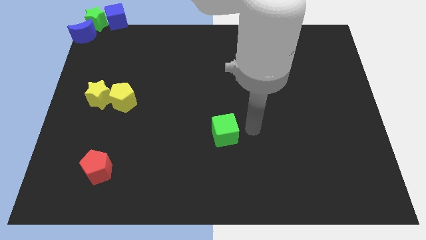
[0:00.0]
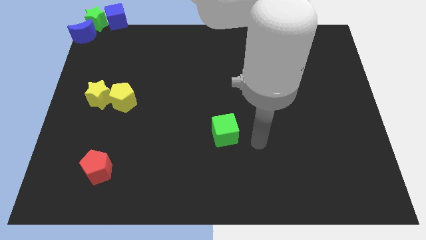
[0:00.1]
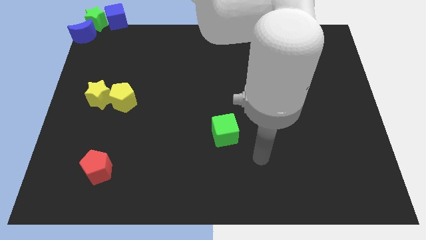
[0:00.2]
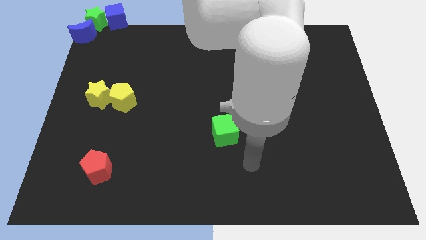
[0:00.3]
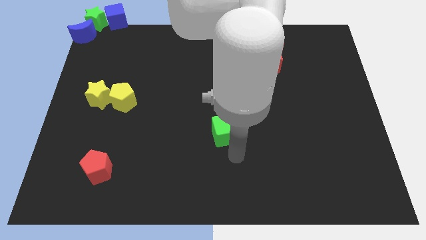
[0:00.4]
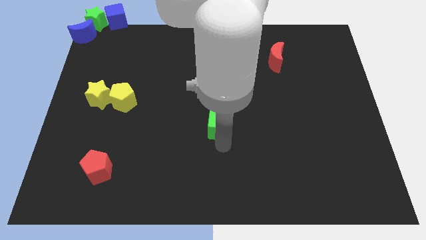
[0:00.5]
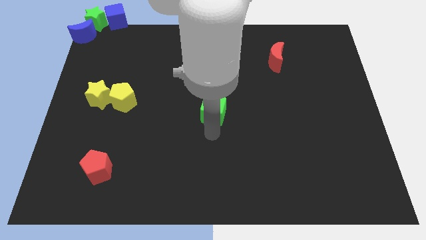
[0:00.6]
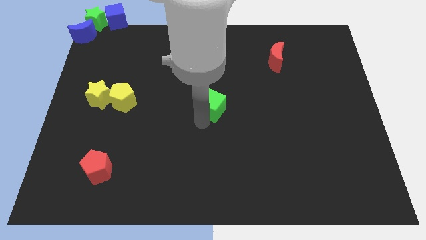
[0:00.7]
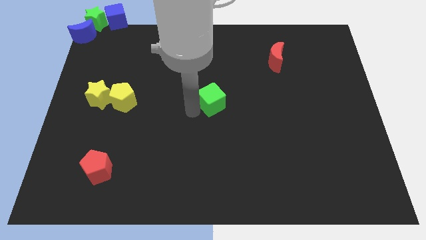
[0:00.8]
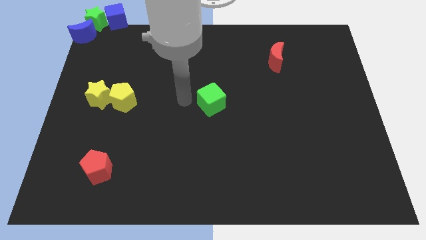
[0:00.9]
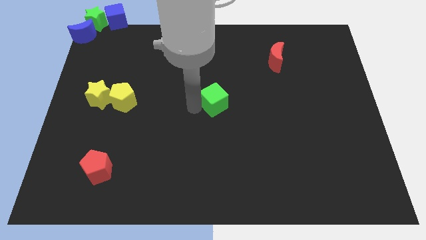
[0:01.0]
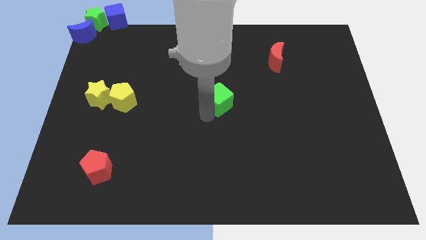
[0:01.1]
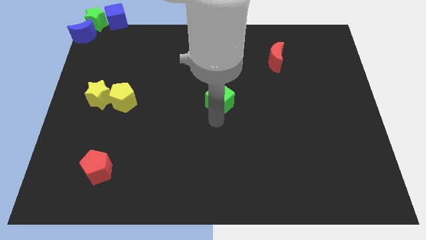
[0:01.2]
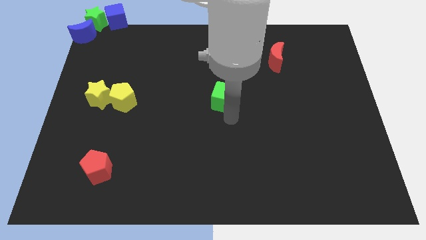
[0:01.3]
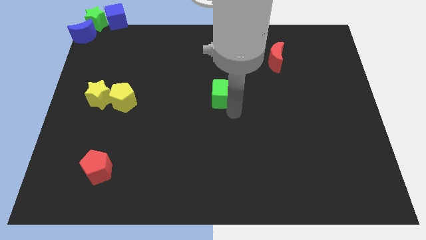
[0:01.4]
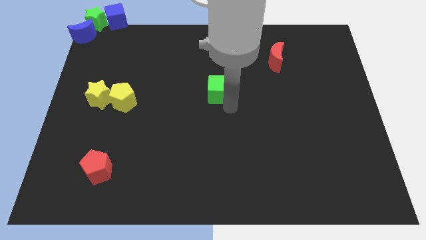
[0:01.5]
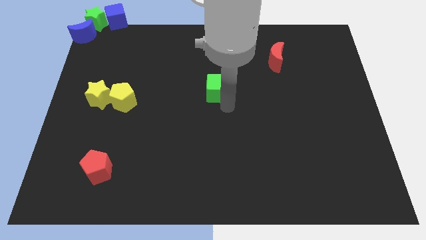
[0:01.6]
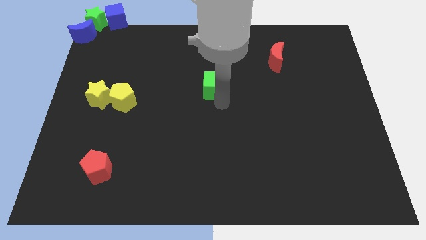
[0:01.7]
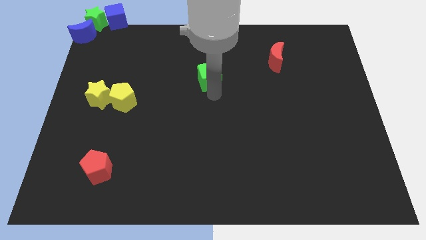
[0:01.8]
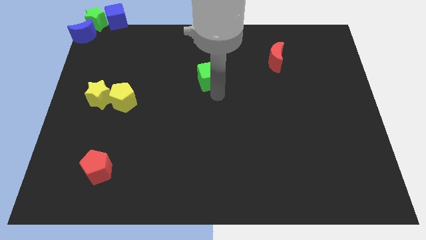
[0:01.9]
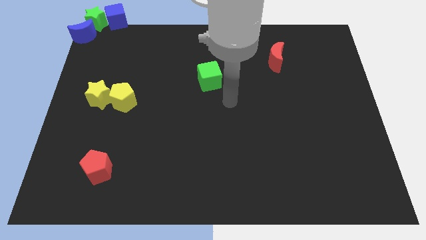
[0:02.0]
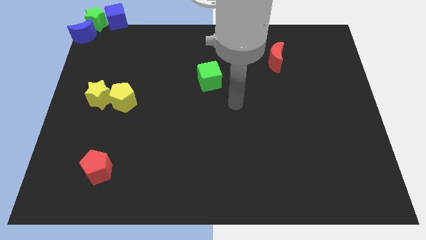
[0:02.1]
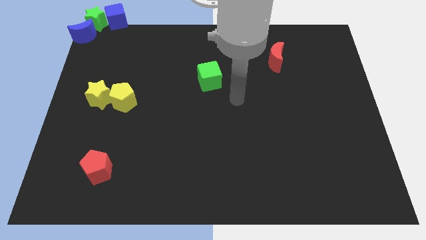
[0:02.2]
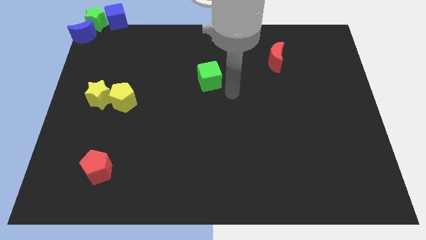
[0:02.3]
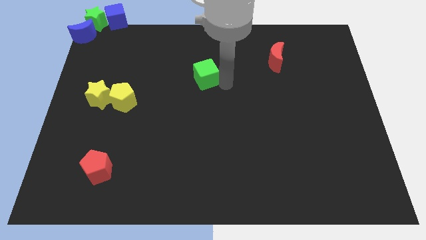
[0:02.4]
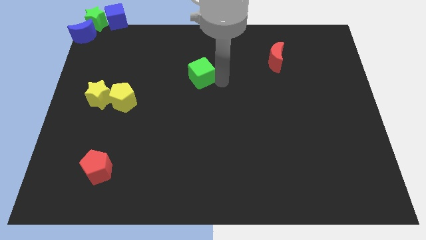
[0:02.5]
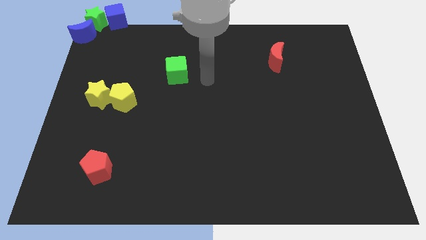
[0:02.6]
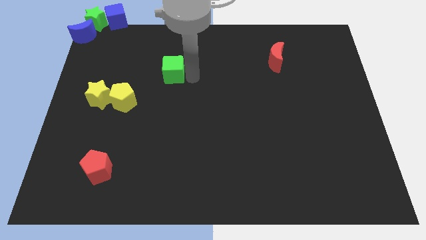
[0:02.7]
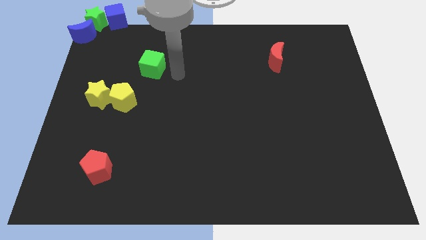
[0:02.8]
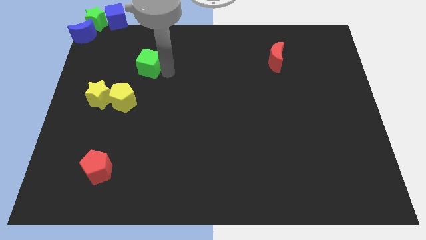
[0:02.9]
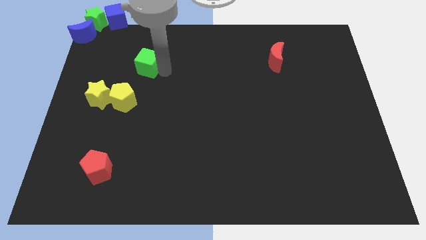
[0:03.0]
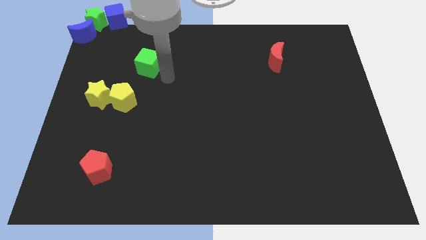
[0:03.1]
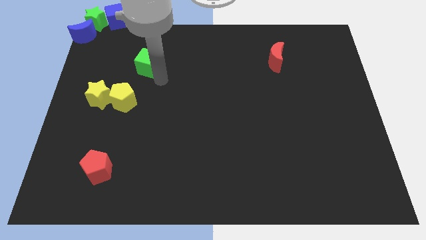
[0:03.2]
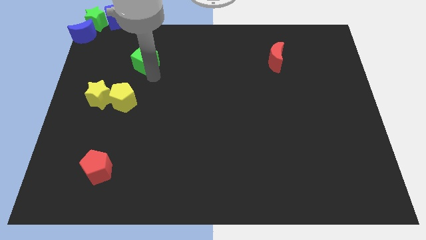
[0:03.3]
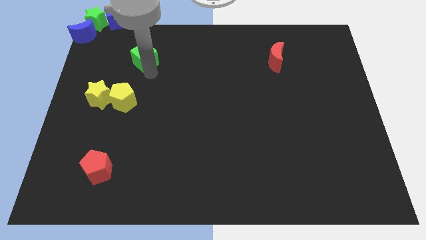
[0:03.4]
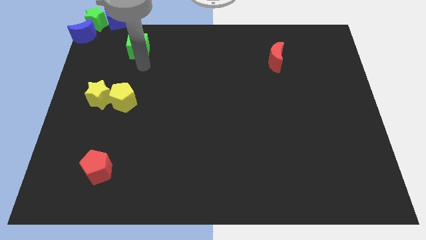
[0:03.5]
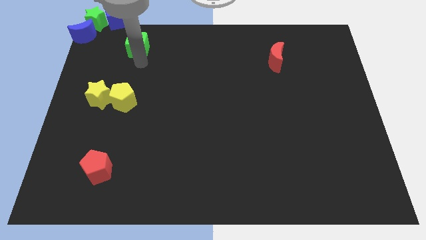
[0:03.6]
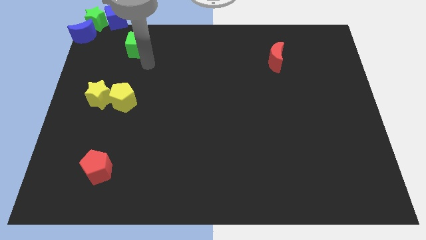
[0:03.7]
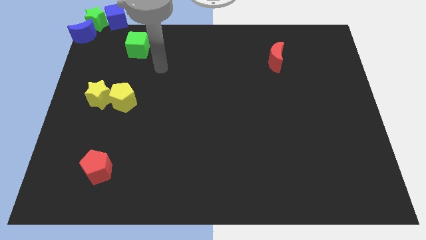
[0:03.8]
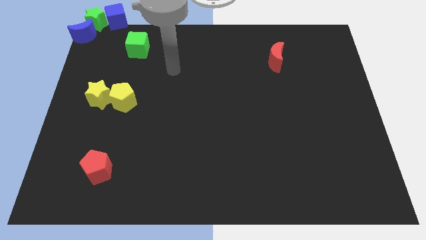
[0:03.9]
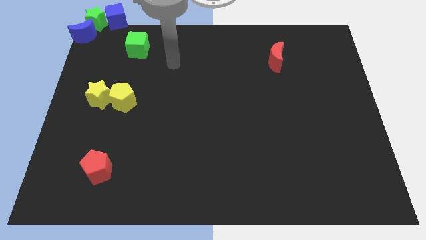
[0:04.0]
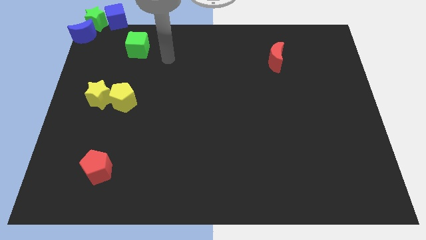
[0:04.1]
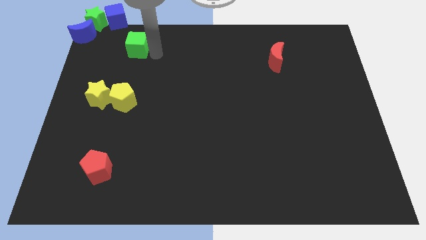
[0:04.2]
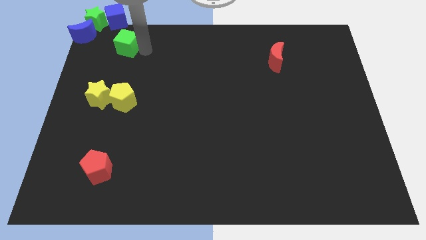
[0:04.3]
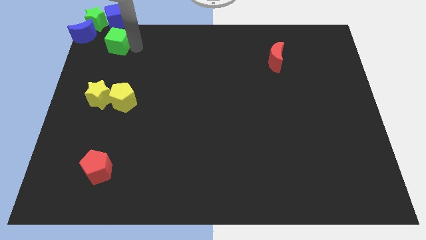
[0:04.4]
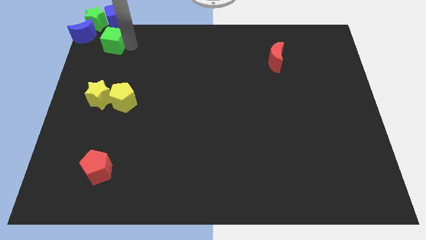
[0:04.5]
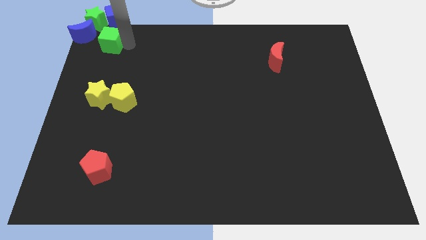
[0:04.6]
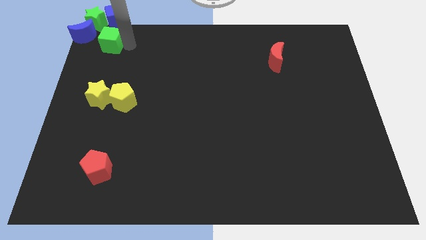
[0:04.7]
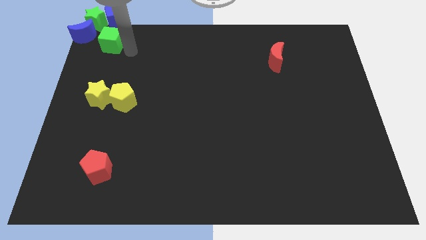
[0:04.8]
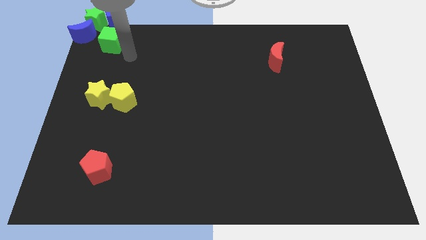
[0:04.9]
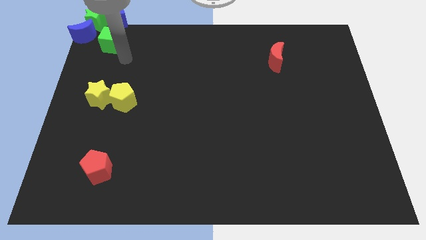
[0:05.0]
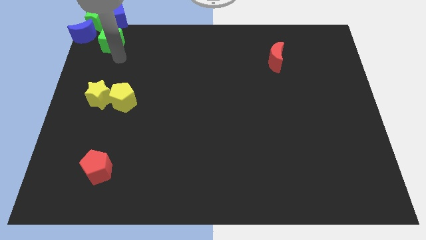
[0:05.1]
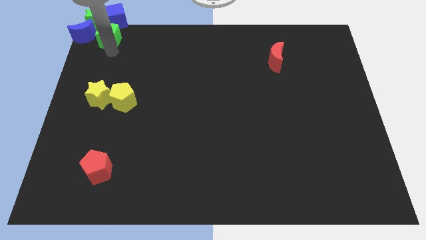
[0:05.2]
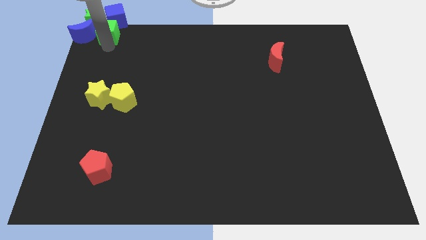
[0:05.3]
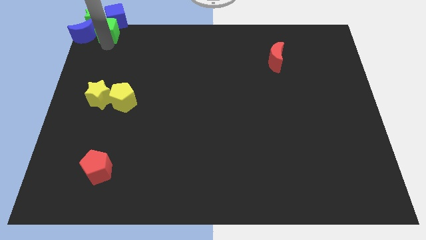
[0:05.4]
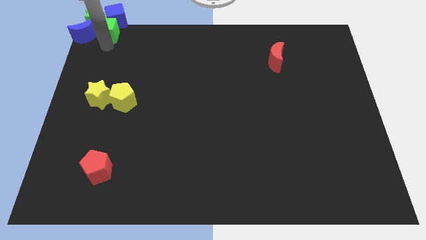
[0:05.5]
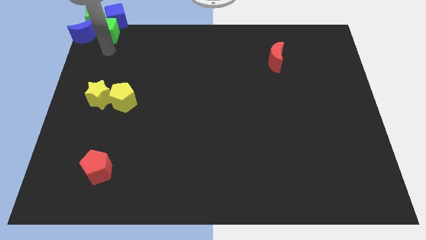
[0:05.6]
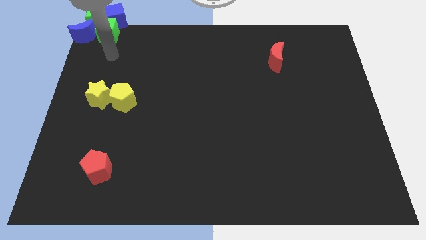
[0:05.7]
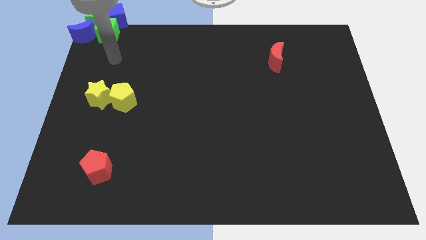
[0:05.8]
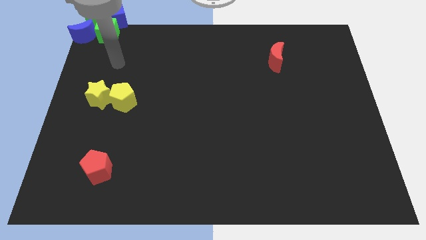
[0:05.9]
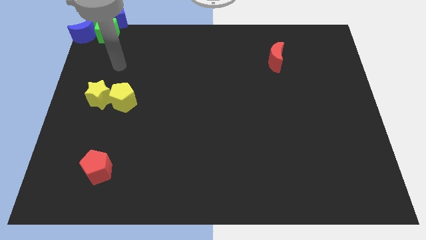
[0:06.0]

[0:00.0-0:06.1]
move the green cube to the bottom of the blue cube

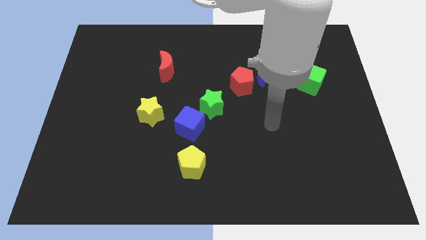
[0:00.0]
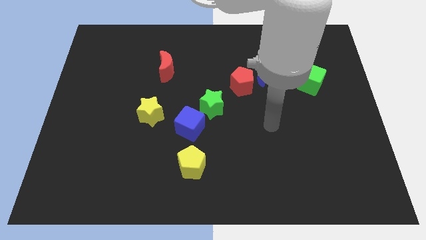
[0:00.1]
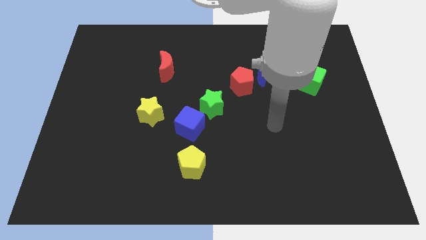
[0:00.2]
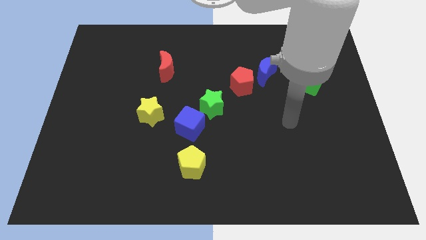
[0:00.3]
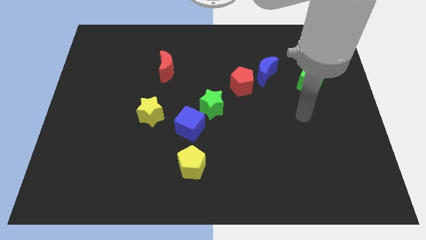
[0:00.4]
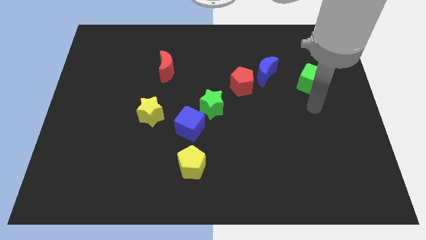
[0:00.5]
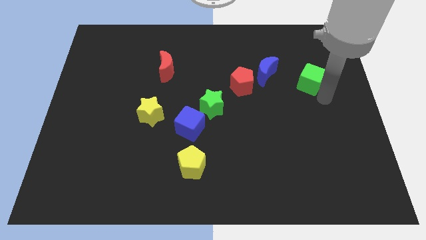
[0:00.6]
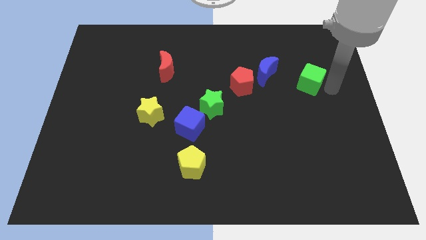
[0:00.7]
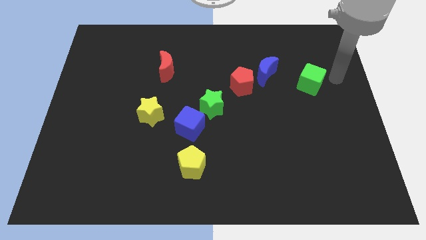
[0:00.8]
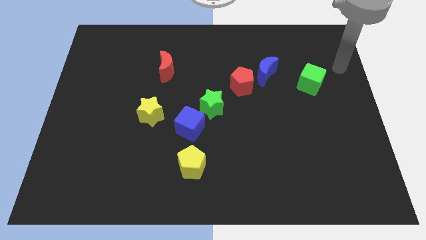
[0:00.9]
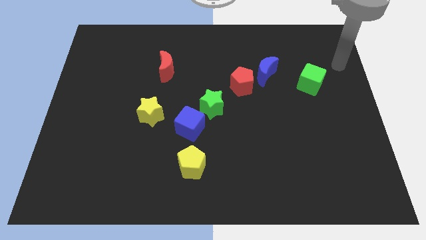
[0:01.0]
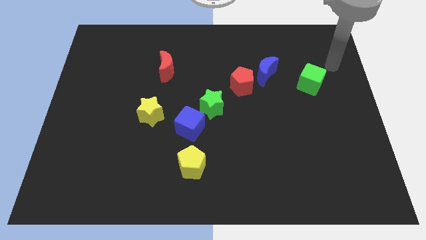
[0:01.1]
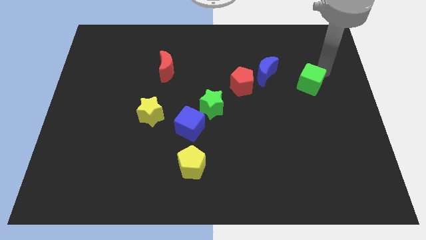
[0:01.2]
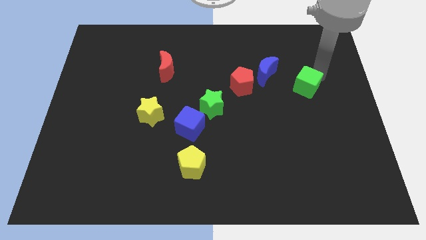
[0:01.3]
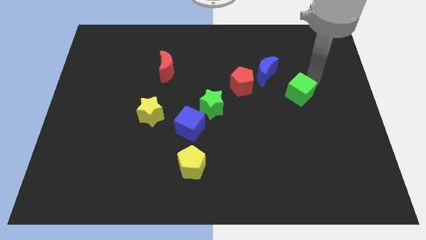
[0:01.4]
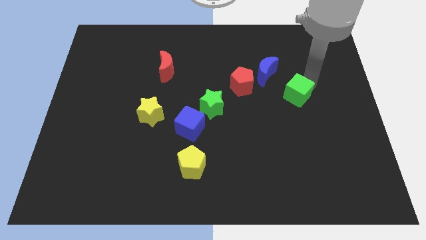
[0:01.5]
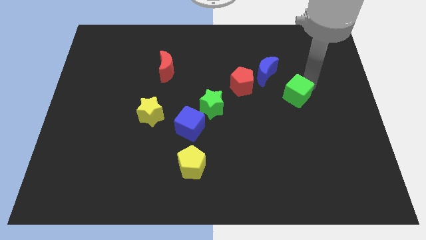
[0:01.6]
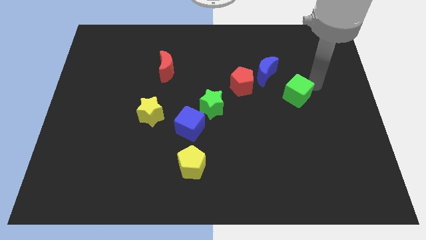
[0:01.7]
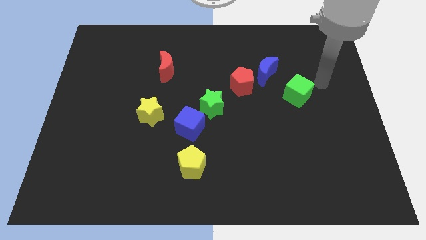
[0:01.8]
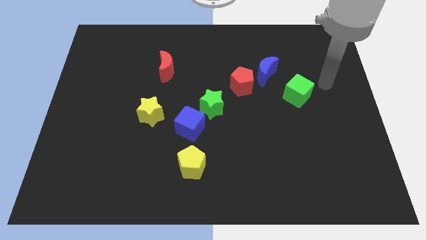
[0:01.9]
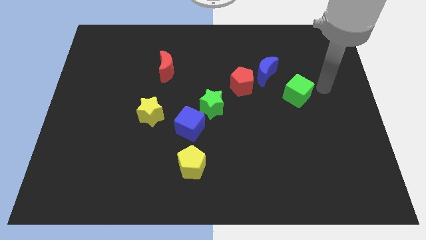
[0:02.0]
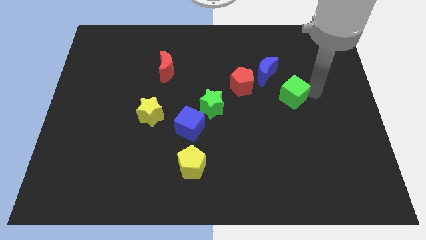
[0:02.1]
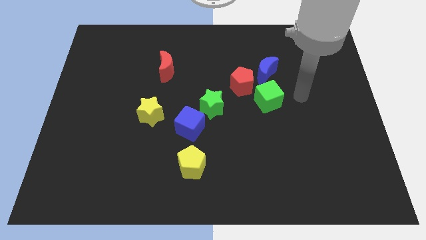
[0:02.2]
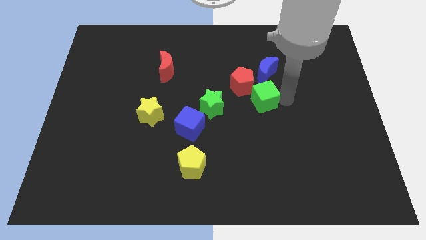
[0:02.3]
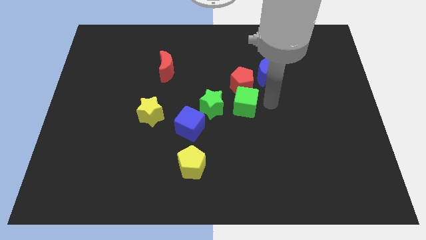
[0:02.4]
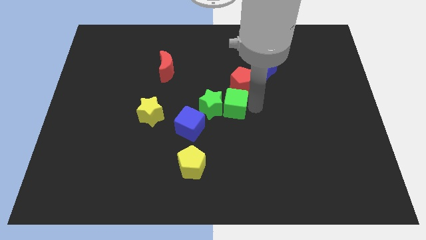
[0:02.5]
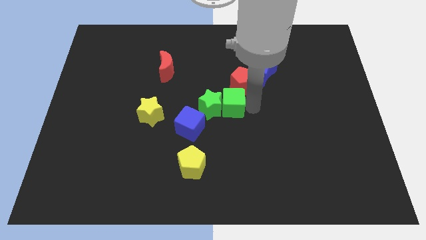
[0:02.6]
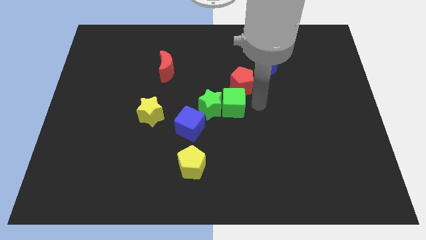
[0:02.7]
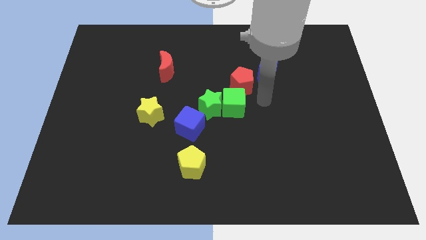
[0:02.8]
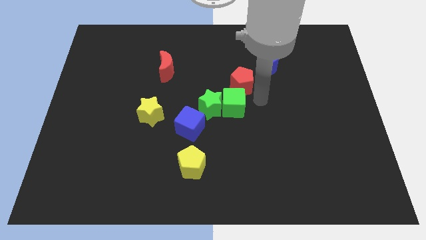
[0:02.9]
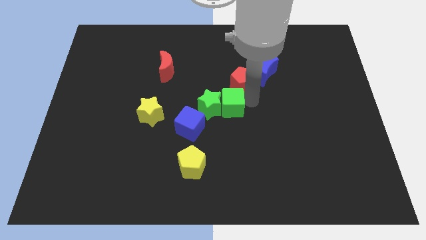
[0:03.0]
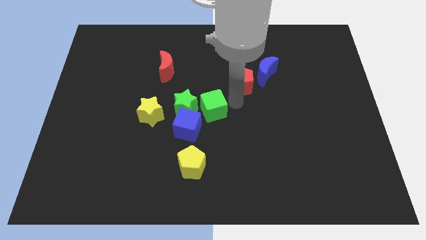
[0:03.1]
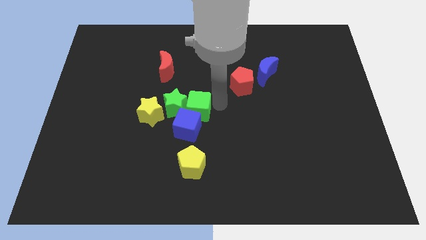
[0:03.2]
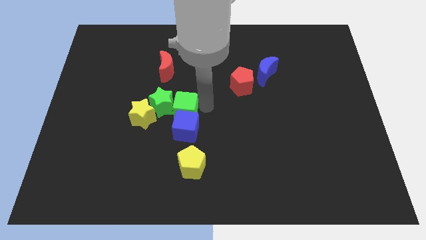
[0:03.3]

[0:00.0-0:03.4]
push the green cube into the green star
